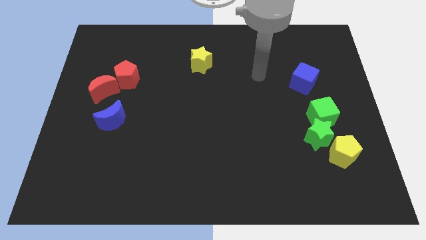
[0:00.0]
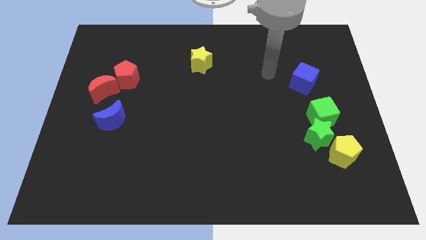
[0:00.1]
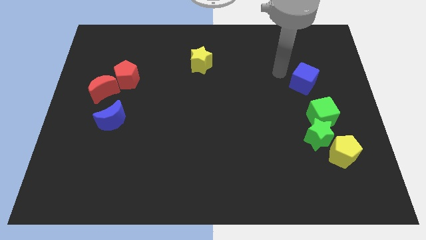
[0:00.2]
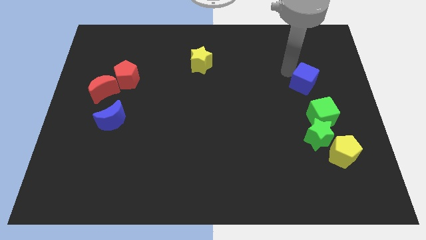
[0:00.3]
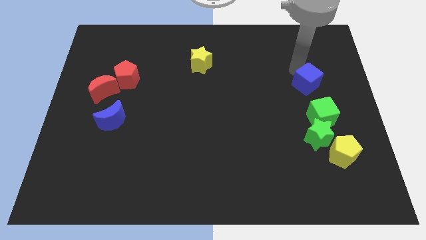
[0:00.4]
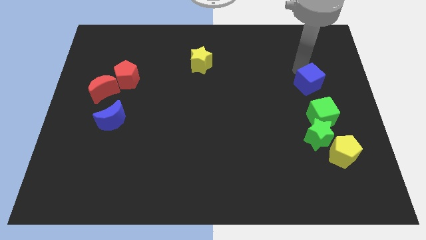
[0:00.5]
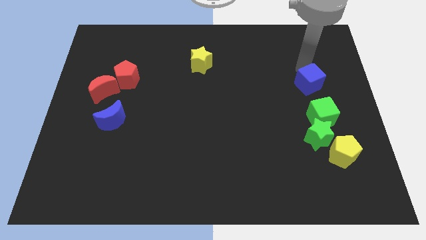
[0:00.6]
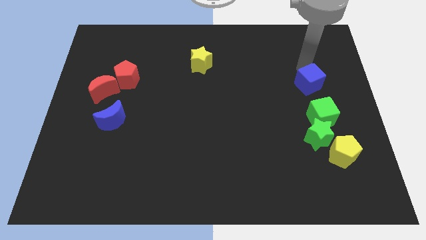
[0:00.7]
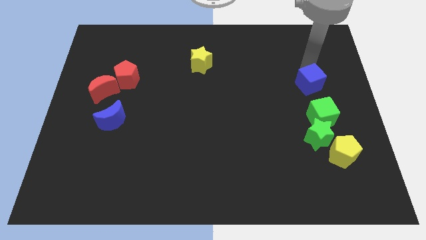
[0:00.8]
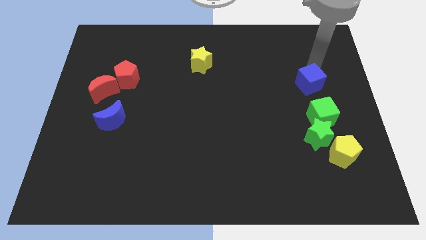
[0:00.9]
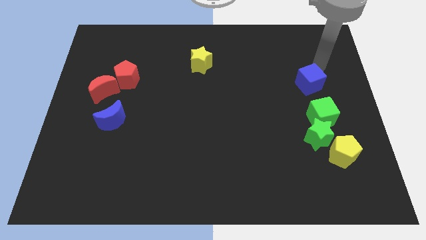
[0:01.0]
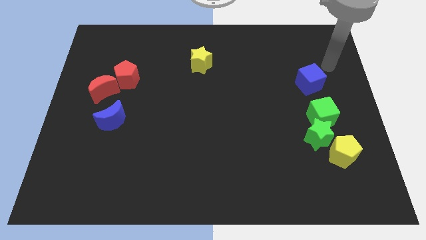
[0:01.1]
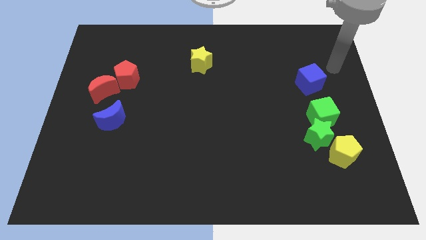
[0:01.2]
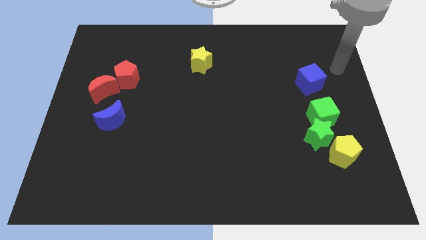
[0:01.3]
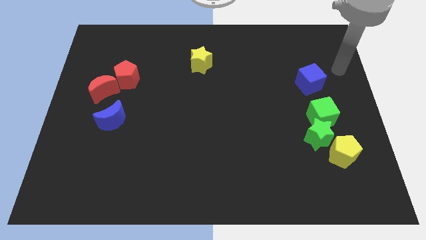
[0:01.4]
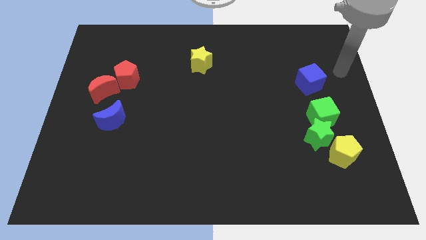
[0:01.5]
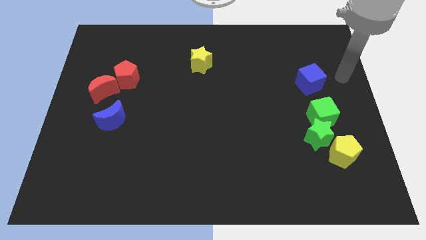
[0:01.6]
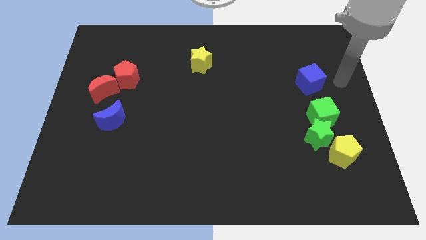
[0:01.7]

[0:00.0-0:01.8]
move the blue cube slightly to the bottom

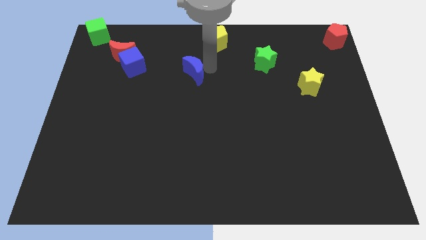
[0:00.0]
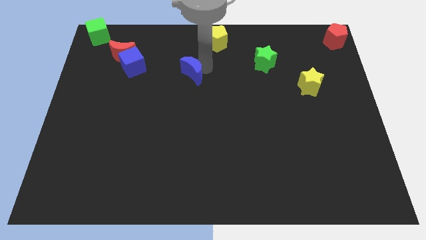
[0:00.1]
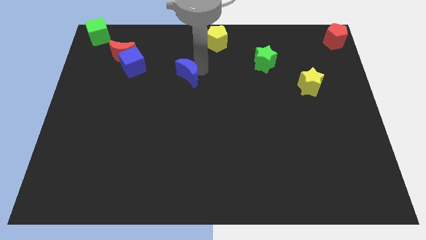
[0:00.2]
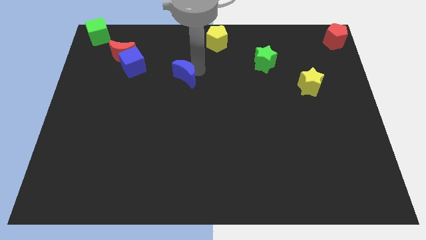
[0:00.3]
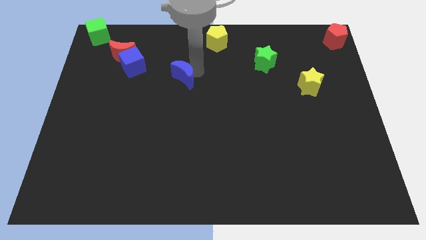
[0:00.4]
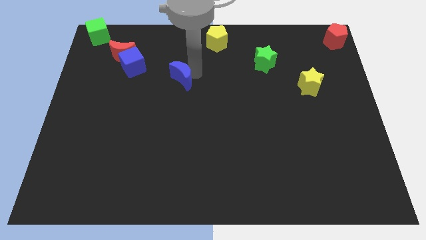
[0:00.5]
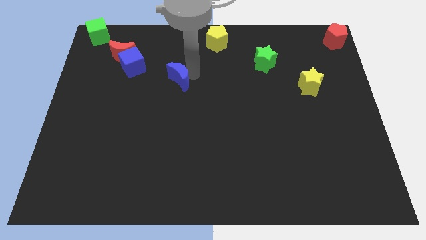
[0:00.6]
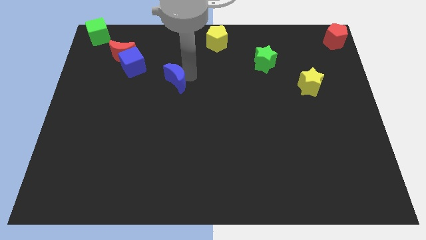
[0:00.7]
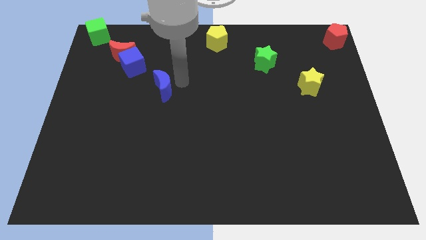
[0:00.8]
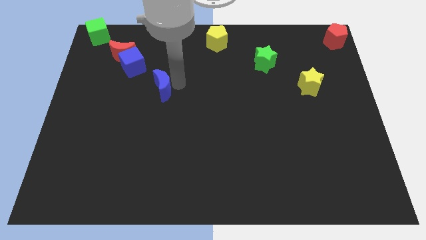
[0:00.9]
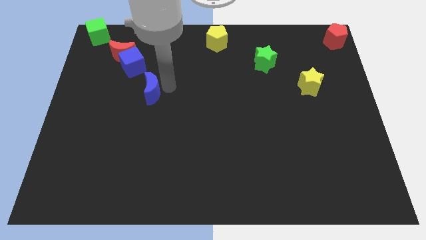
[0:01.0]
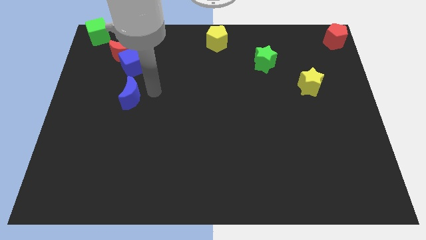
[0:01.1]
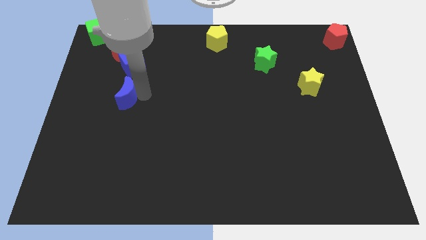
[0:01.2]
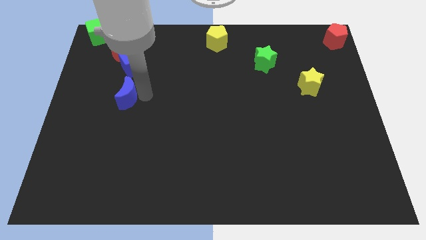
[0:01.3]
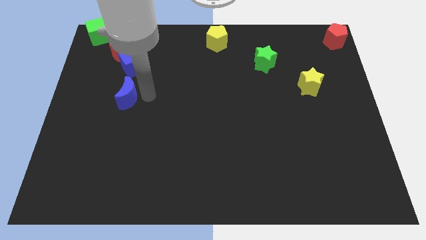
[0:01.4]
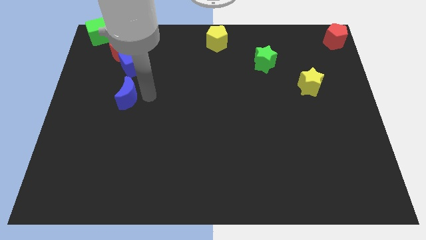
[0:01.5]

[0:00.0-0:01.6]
place blue crescent at the bottom left to blue cube

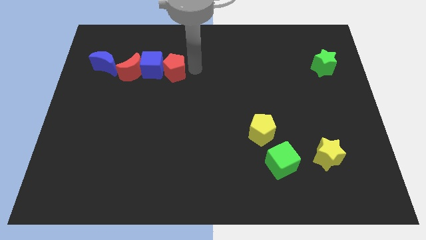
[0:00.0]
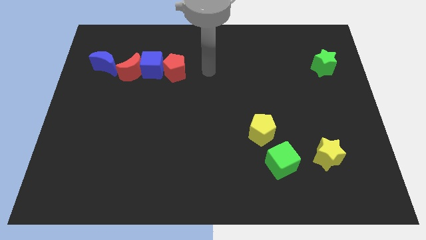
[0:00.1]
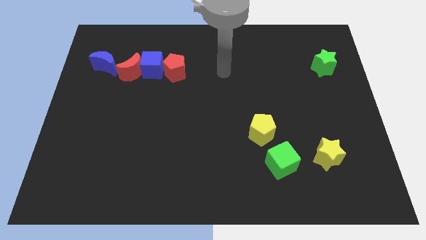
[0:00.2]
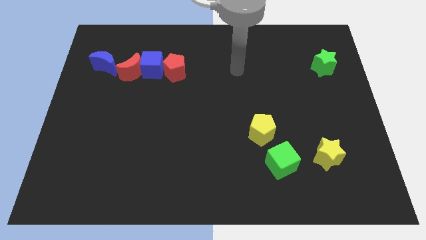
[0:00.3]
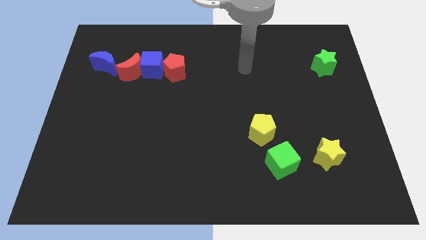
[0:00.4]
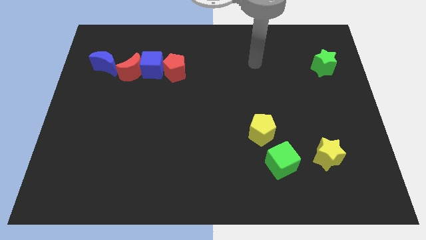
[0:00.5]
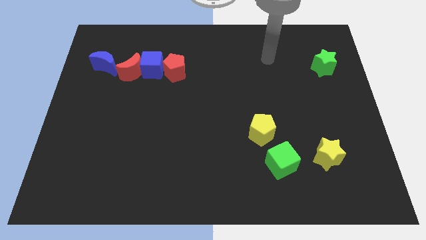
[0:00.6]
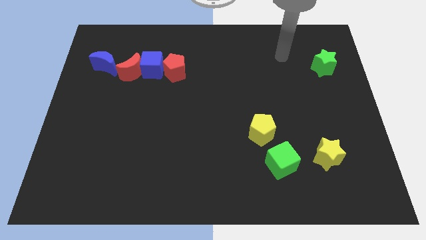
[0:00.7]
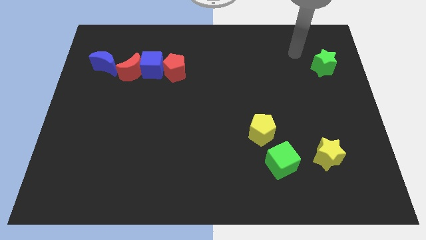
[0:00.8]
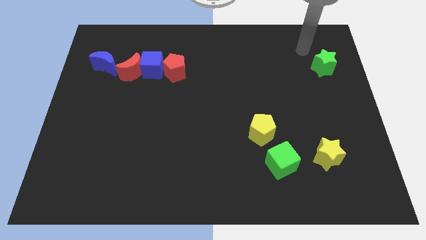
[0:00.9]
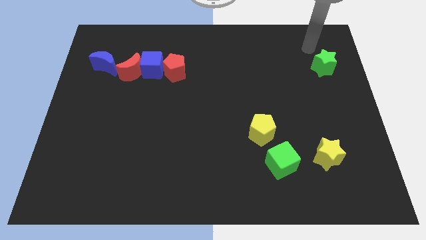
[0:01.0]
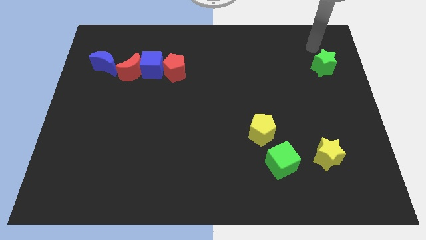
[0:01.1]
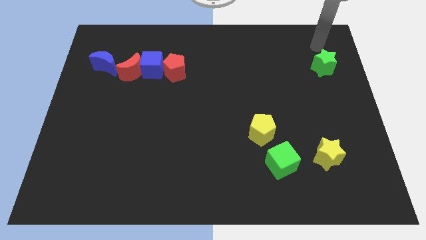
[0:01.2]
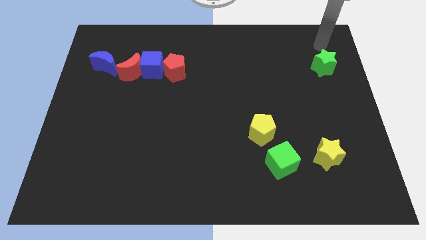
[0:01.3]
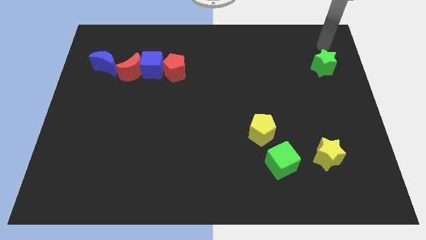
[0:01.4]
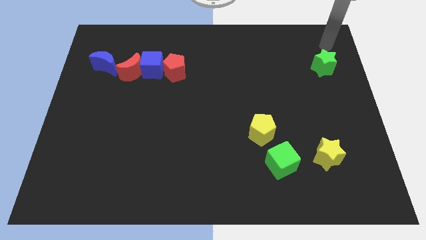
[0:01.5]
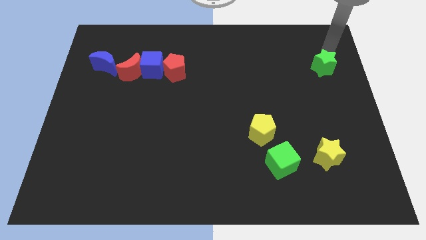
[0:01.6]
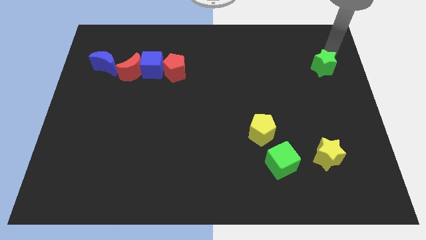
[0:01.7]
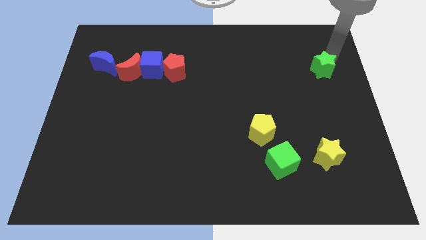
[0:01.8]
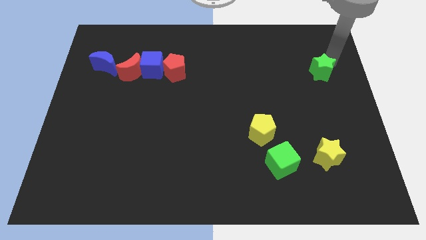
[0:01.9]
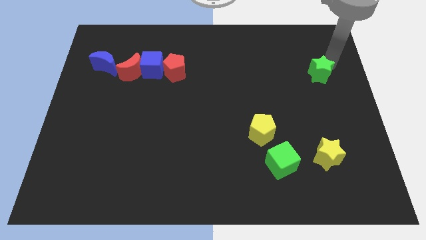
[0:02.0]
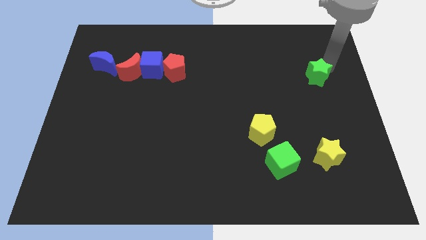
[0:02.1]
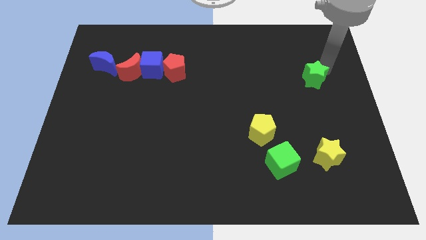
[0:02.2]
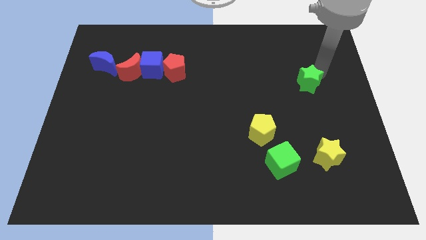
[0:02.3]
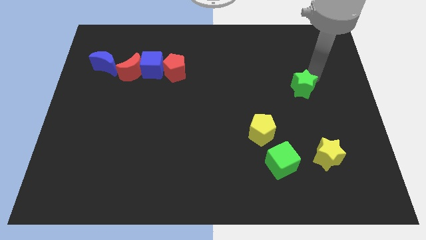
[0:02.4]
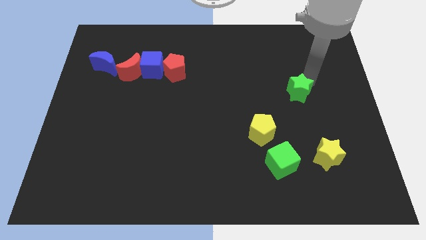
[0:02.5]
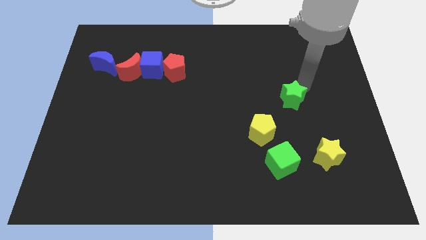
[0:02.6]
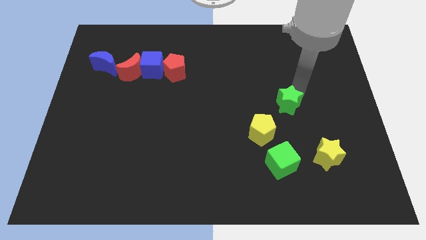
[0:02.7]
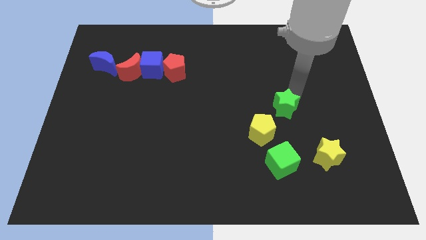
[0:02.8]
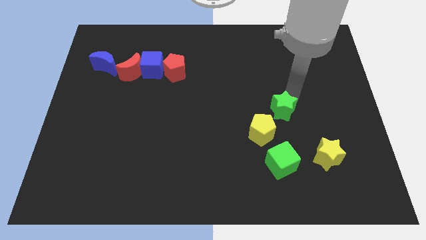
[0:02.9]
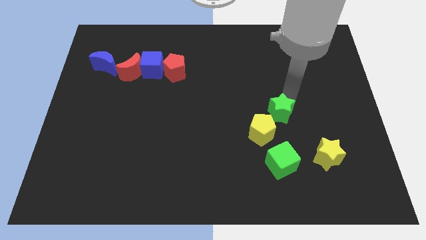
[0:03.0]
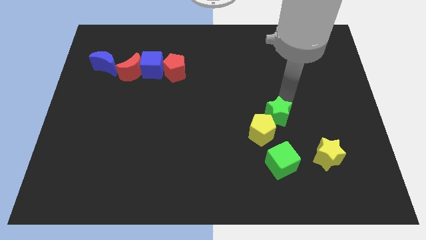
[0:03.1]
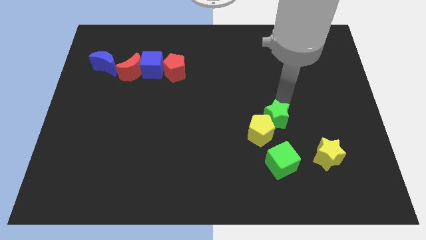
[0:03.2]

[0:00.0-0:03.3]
push the green star to the top right side of the yellow pentagon

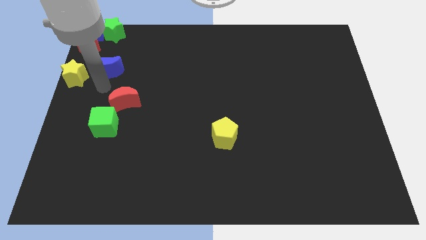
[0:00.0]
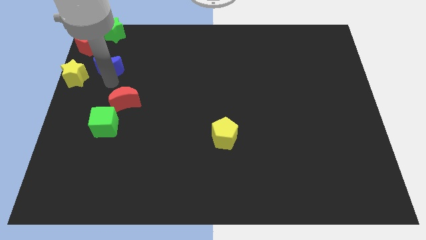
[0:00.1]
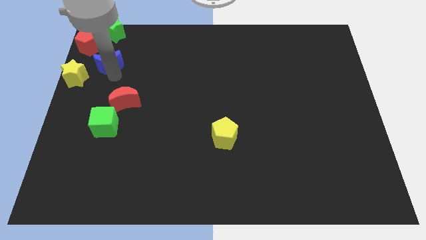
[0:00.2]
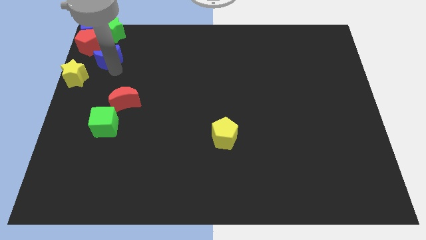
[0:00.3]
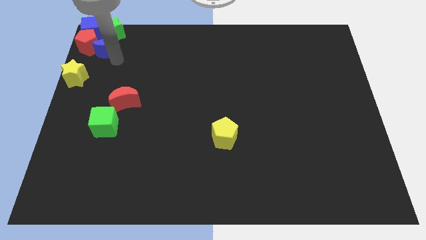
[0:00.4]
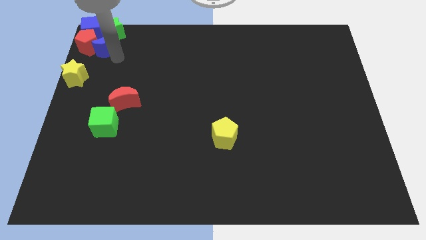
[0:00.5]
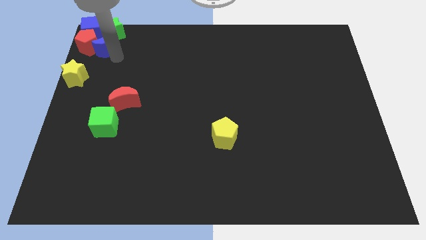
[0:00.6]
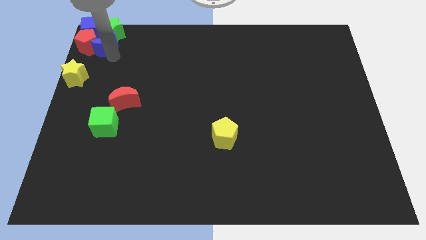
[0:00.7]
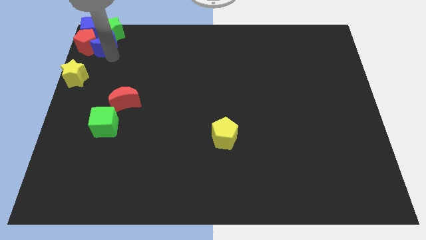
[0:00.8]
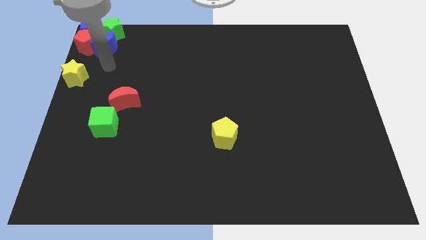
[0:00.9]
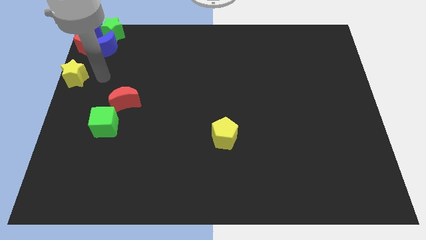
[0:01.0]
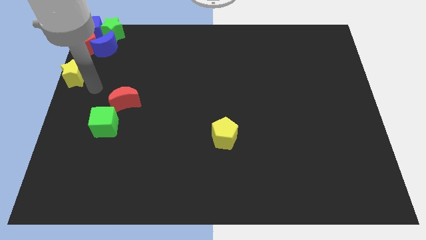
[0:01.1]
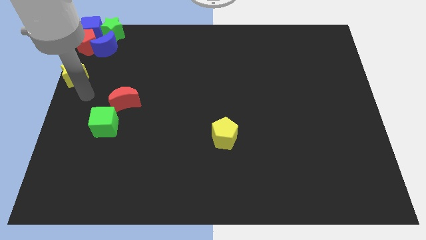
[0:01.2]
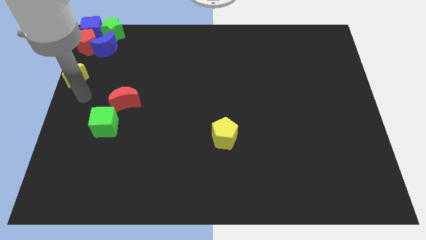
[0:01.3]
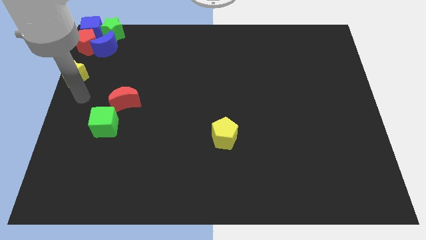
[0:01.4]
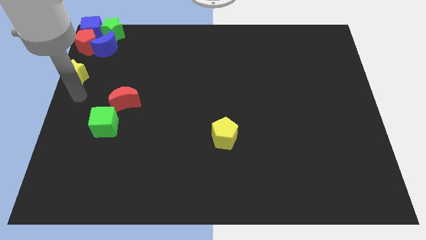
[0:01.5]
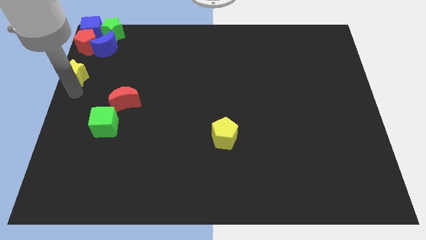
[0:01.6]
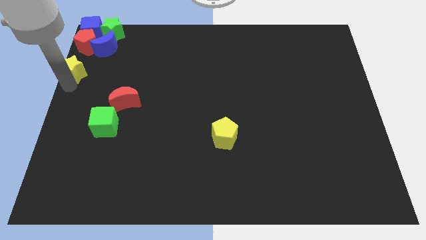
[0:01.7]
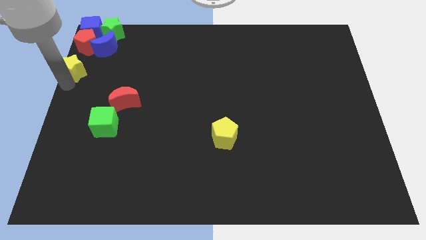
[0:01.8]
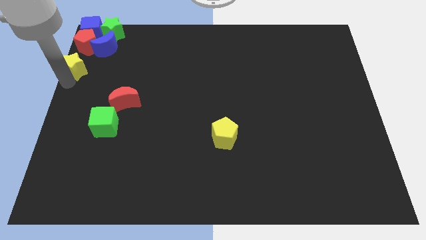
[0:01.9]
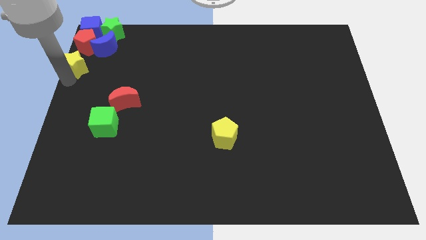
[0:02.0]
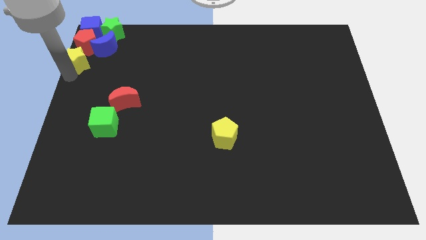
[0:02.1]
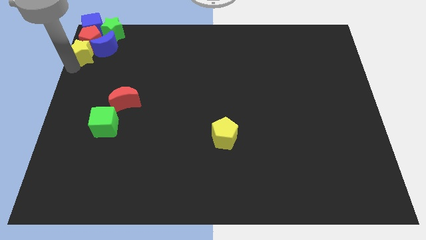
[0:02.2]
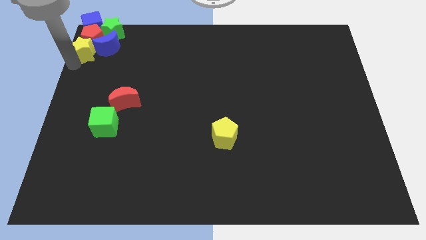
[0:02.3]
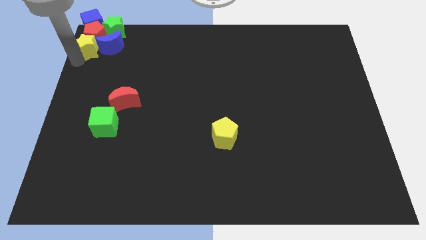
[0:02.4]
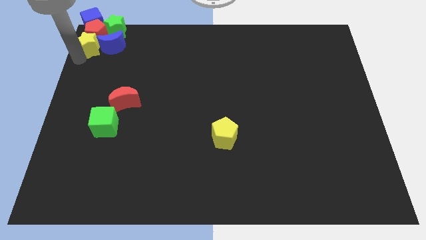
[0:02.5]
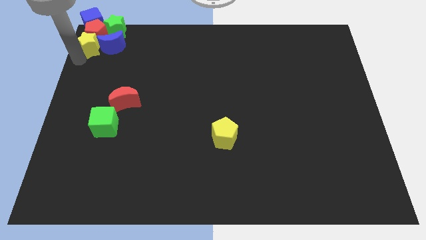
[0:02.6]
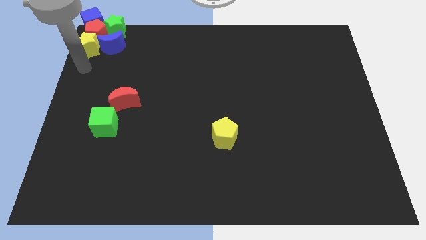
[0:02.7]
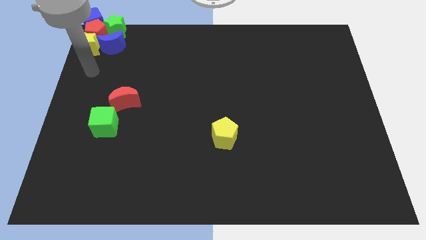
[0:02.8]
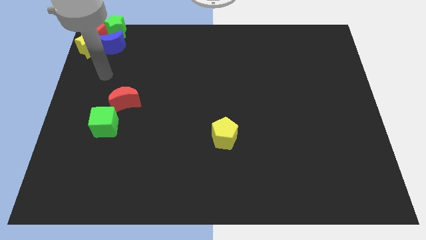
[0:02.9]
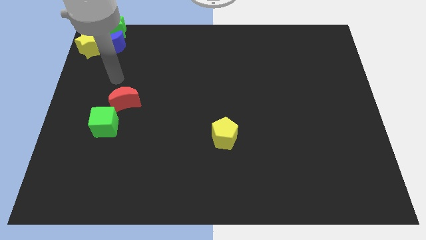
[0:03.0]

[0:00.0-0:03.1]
push the blue crescent yellow star towards the red pentagon
